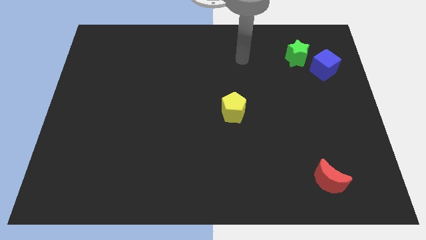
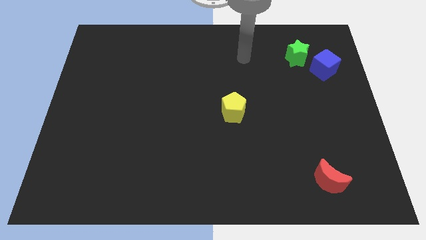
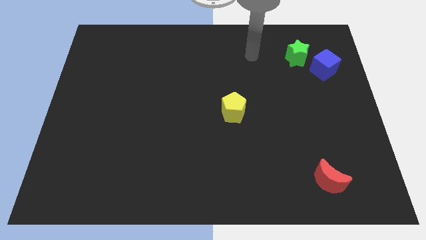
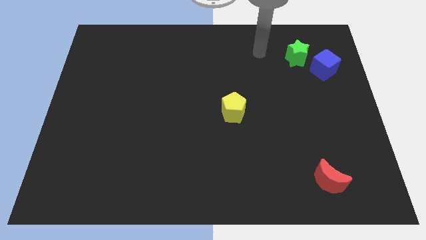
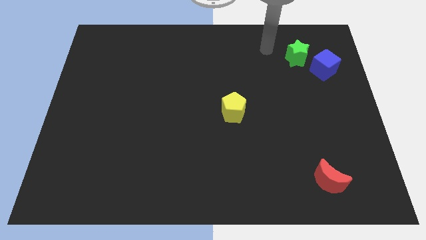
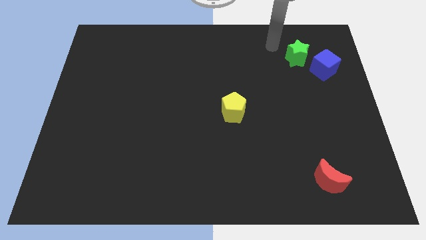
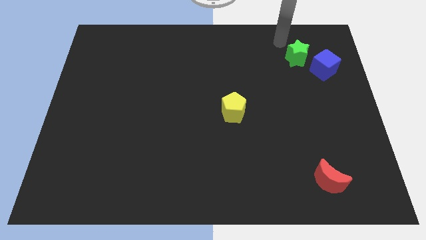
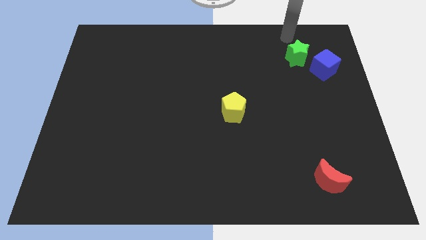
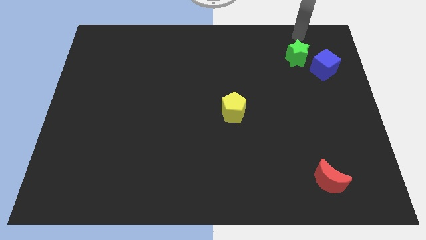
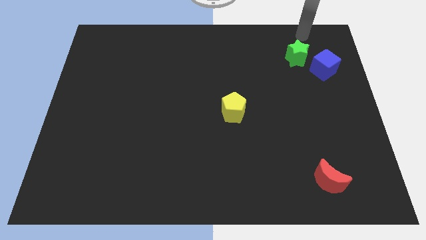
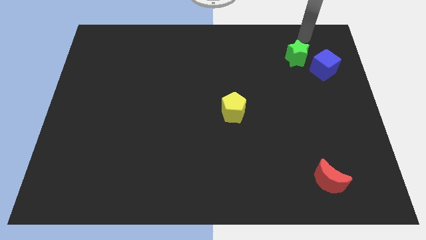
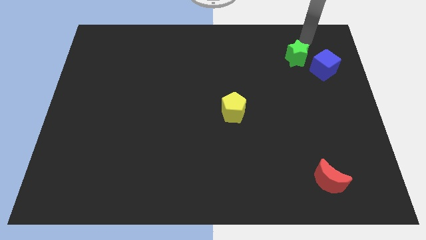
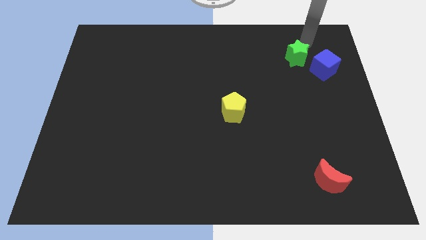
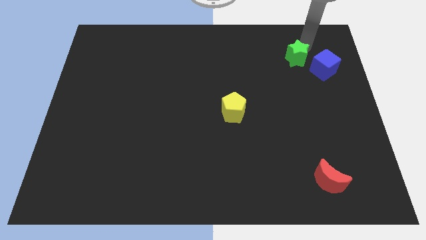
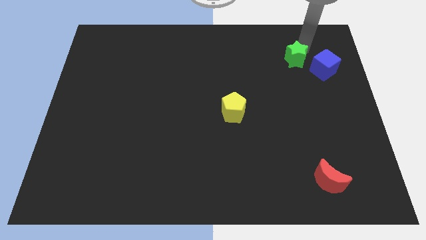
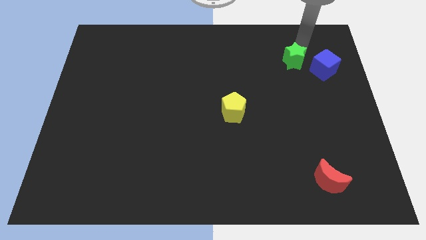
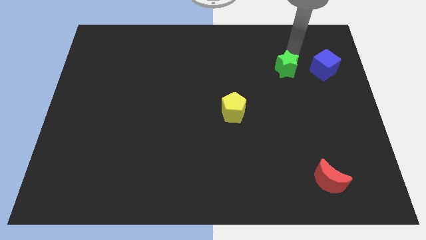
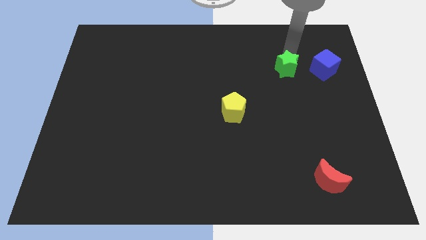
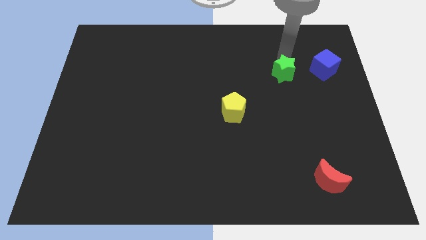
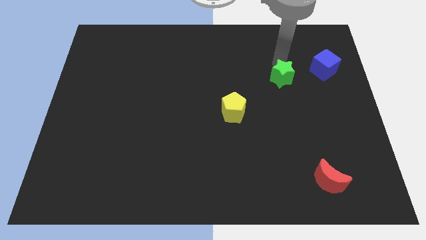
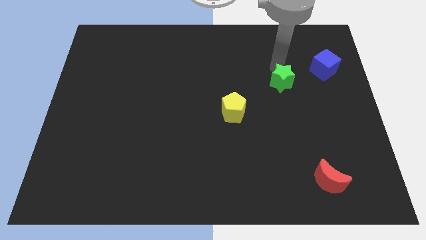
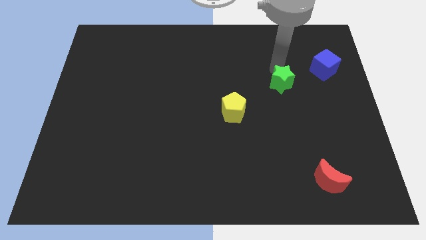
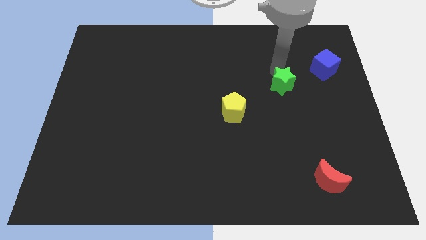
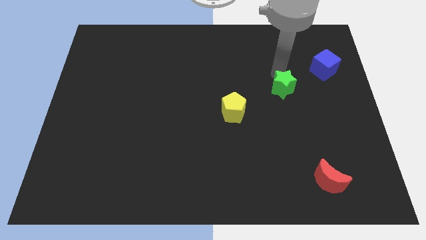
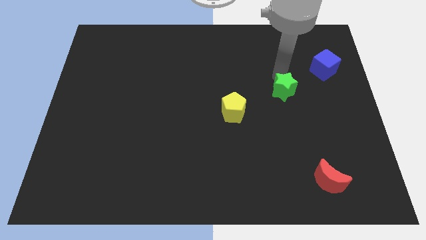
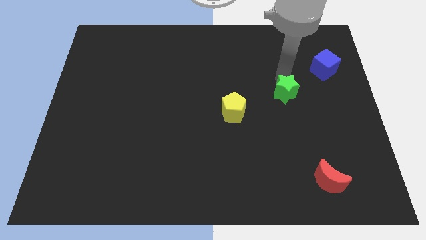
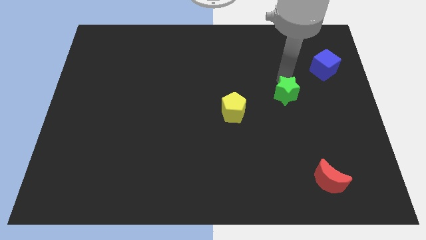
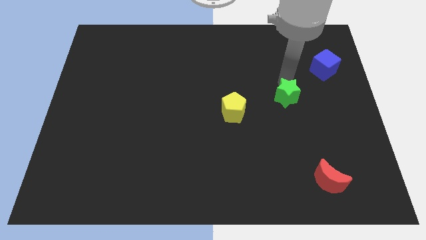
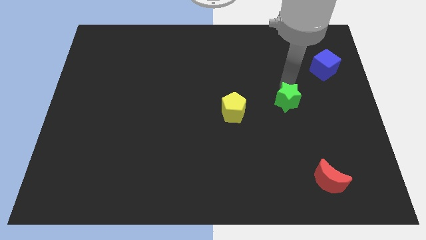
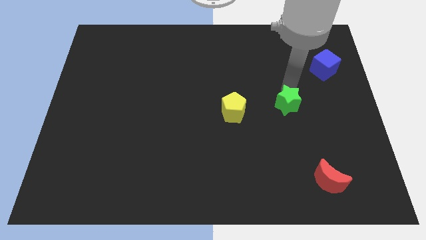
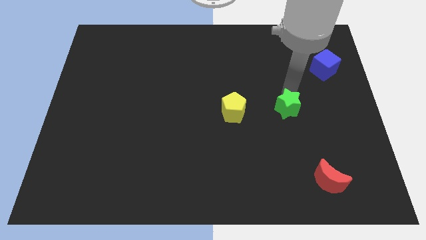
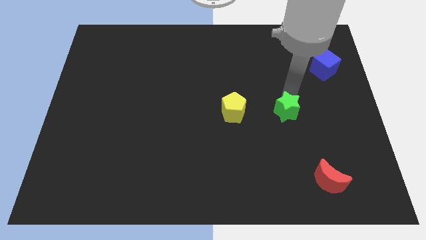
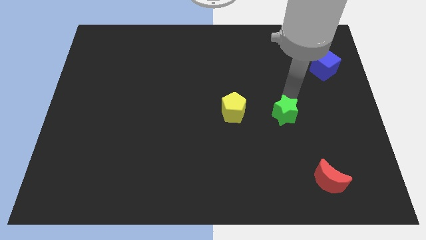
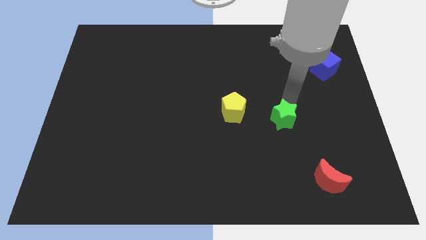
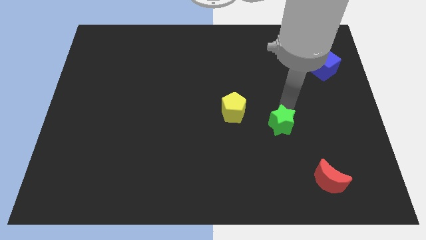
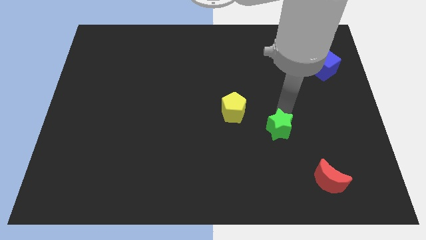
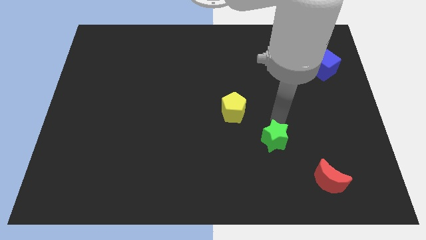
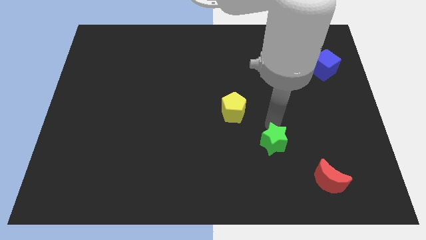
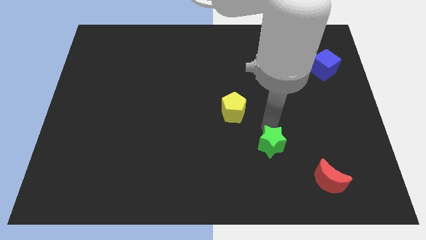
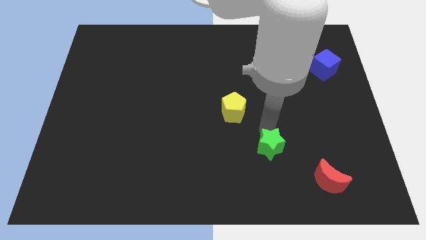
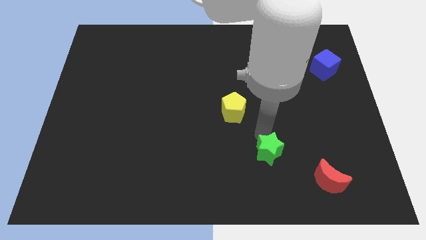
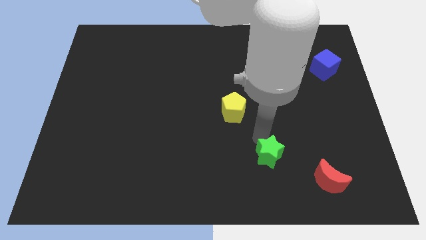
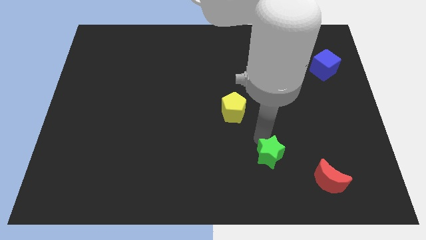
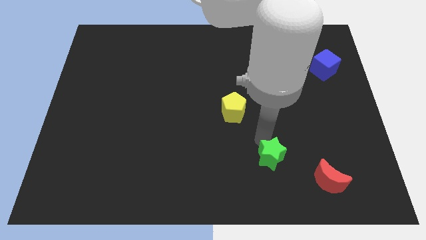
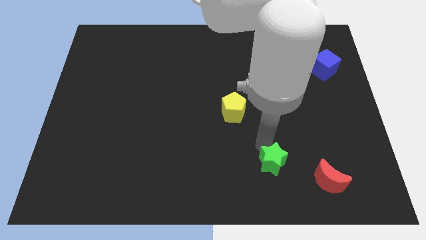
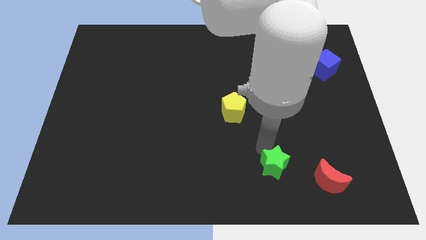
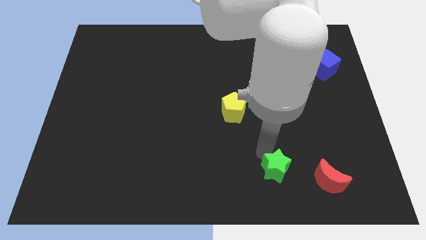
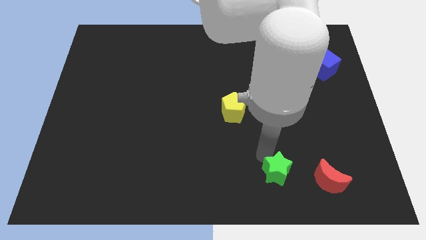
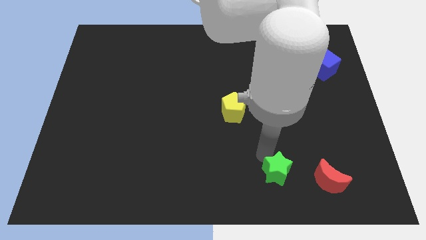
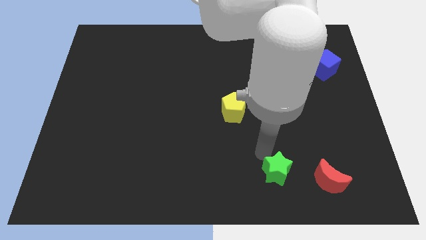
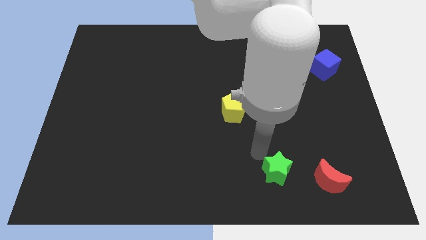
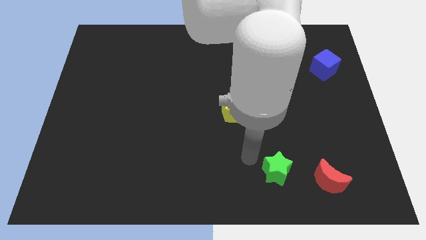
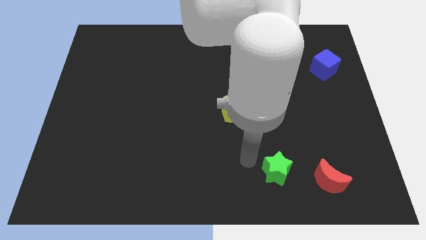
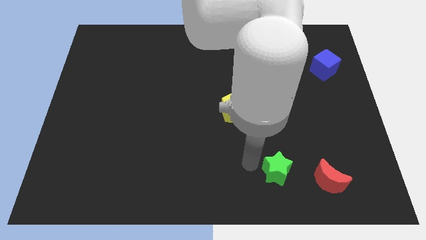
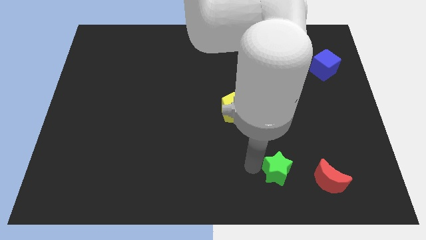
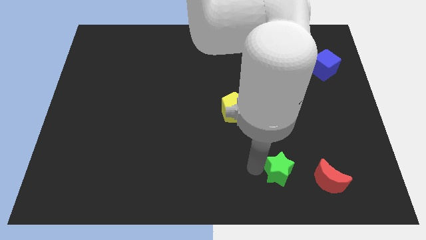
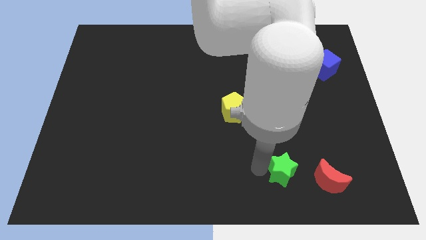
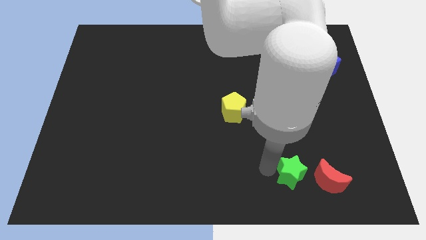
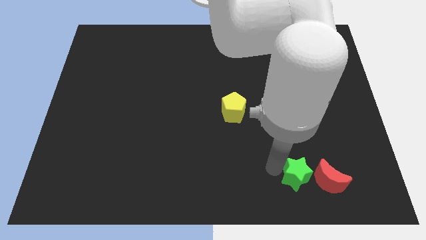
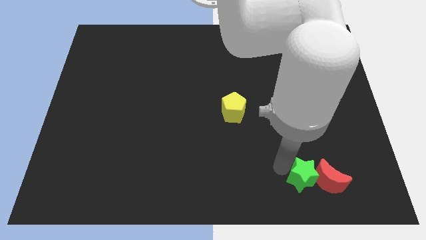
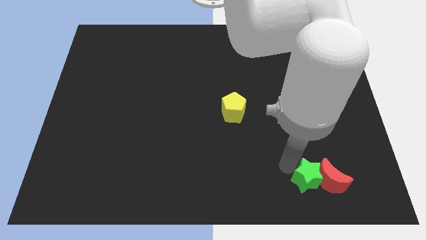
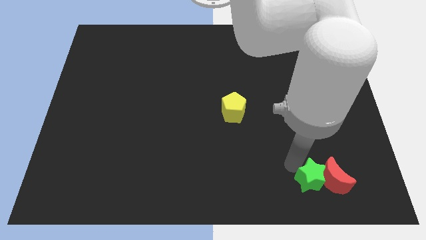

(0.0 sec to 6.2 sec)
push the star next to the red moon

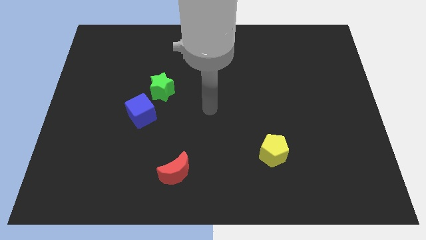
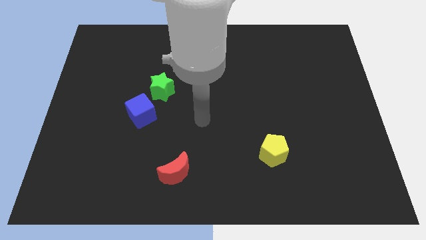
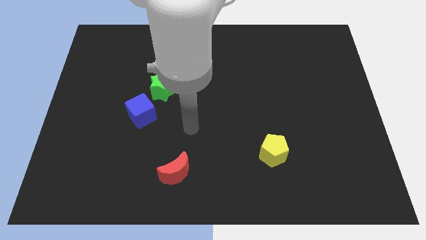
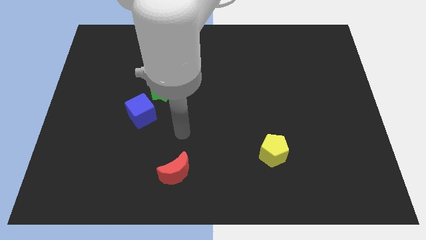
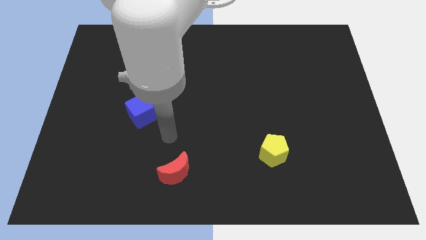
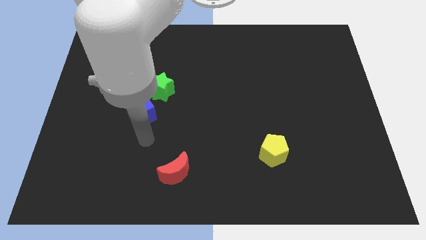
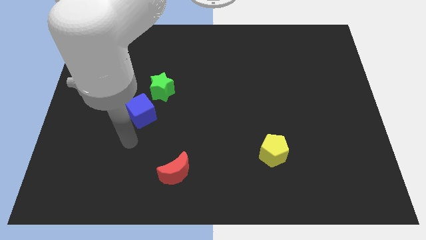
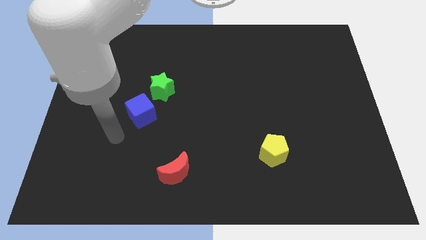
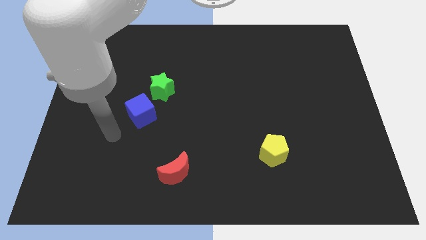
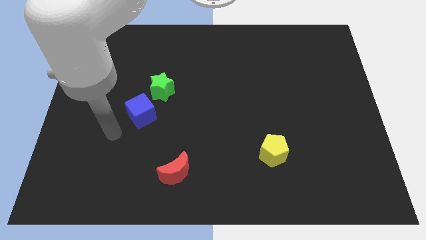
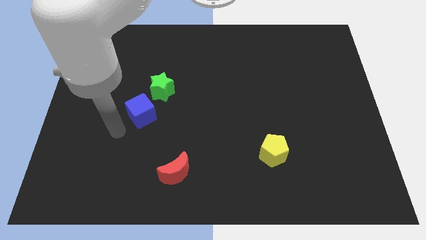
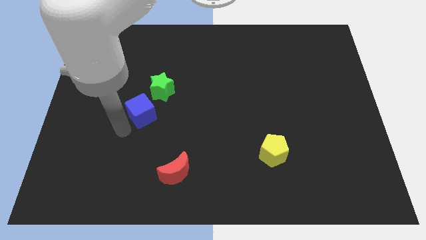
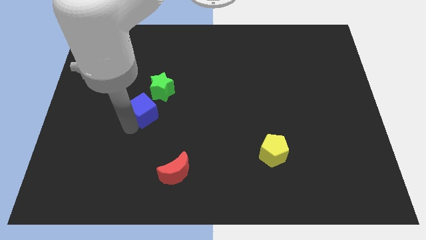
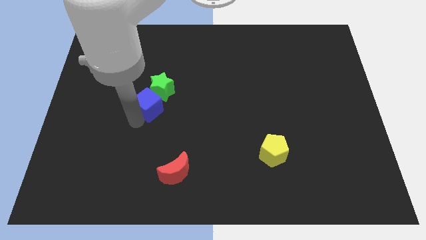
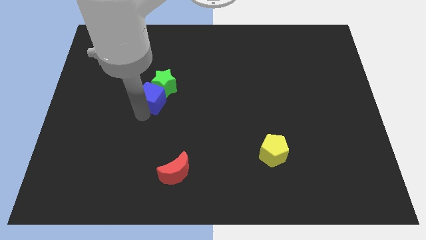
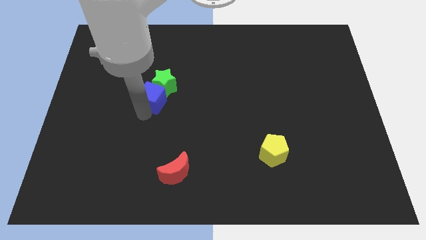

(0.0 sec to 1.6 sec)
push the blue cube close to the green star

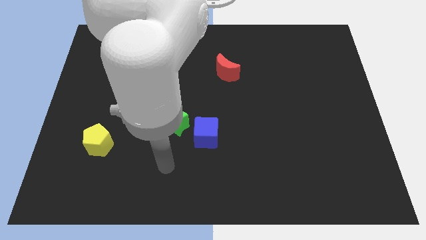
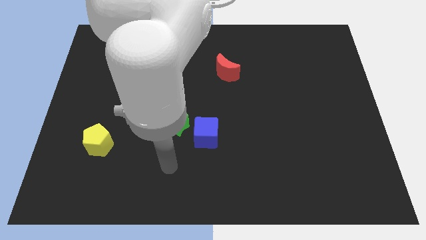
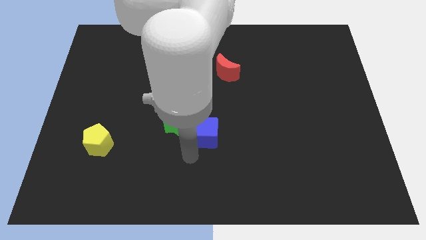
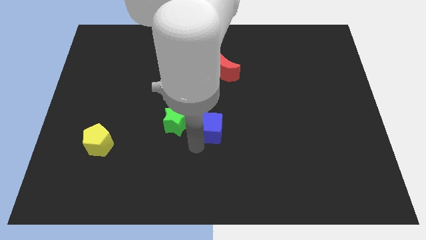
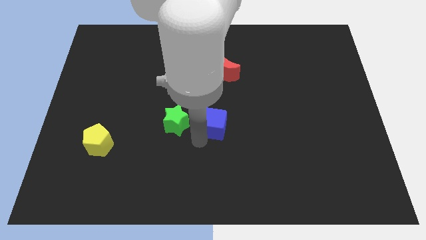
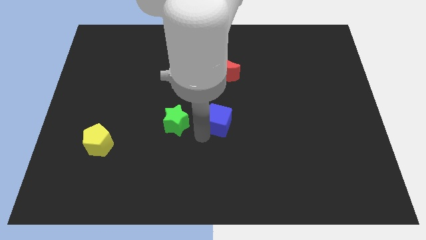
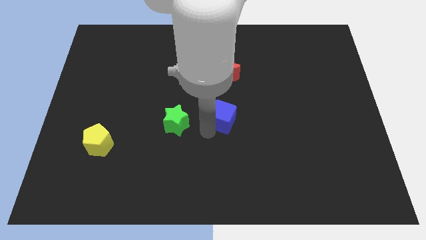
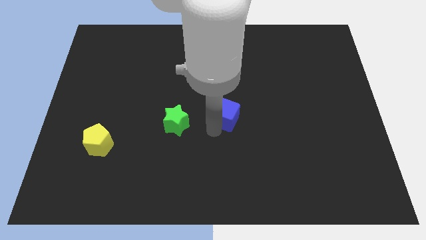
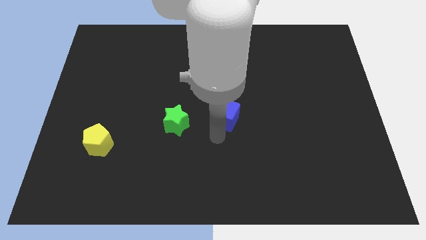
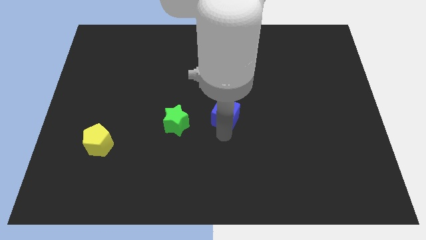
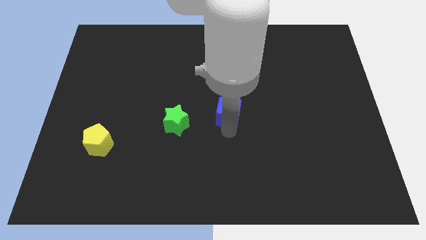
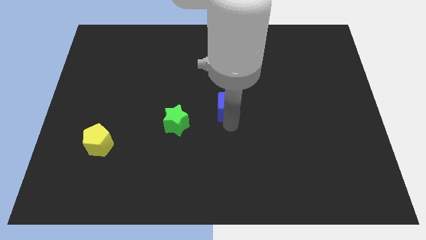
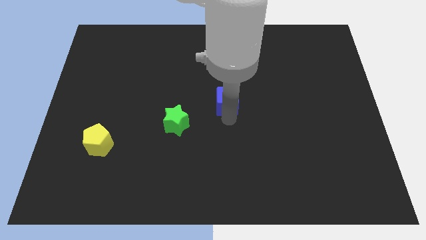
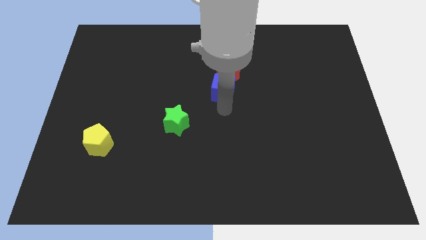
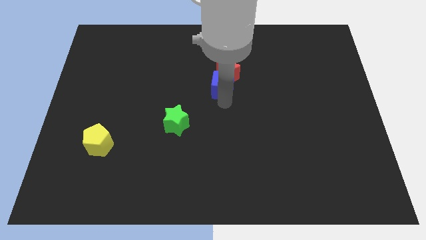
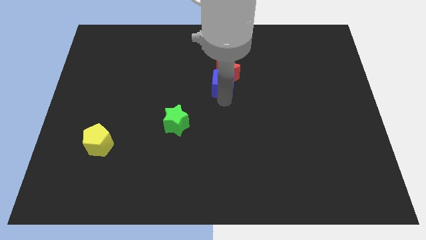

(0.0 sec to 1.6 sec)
slide the blue block to the moon
